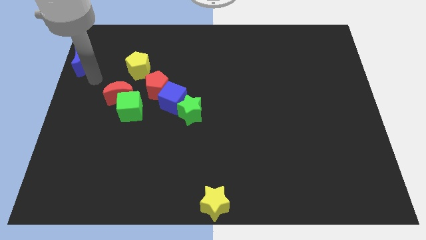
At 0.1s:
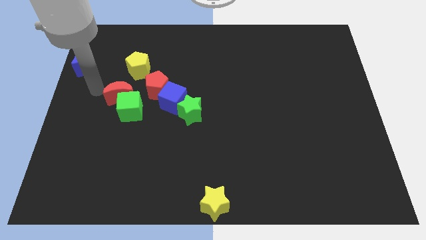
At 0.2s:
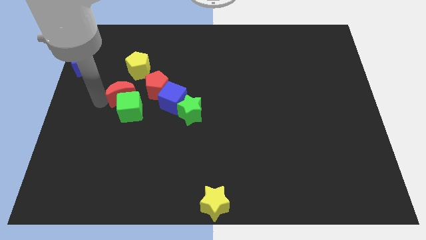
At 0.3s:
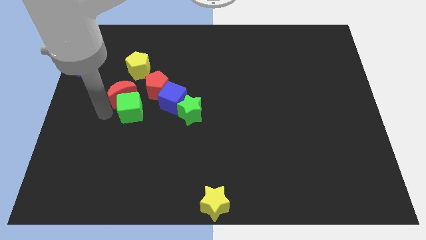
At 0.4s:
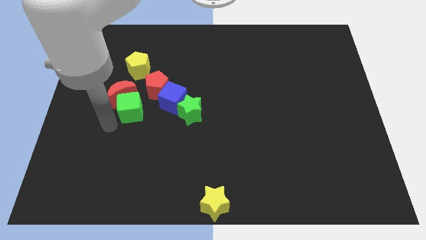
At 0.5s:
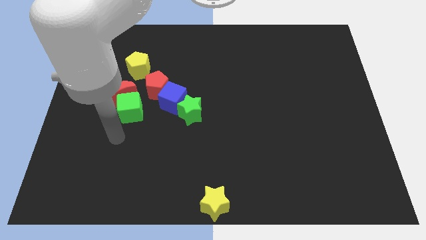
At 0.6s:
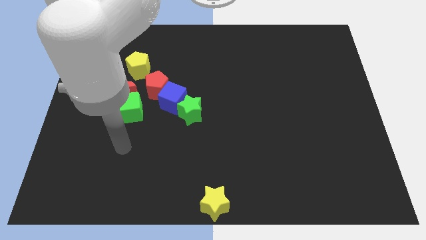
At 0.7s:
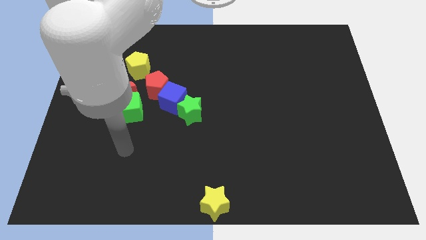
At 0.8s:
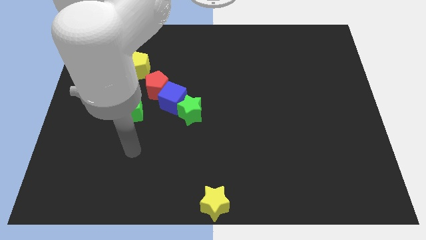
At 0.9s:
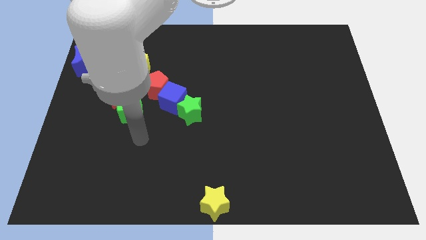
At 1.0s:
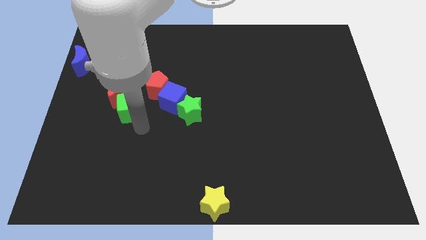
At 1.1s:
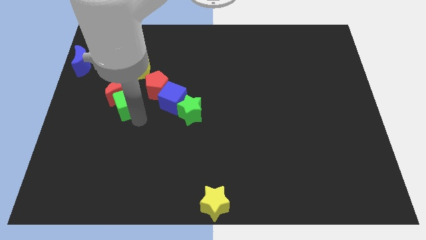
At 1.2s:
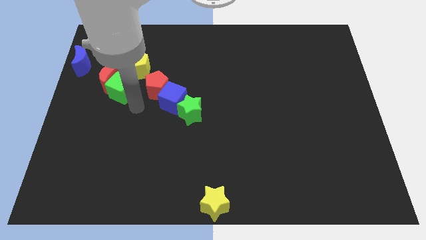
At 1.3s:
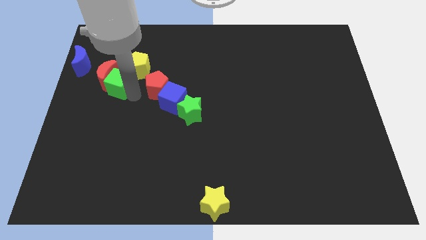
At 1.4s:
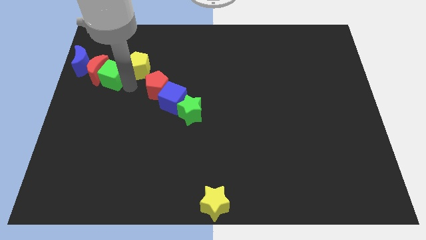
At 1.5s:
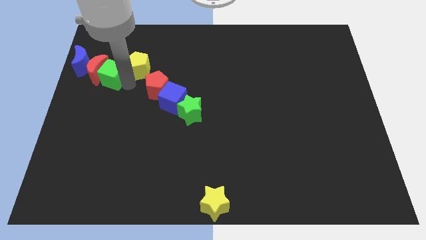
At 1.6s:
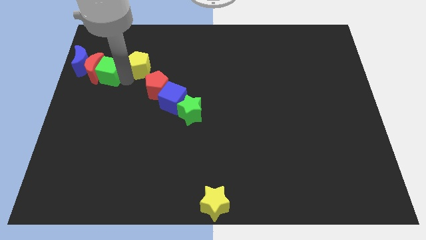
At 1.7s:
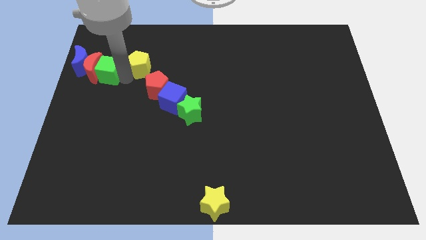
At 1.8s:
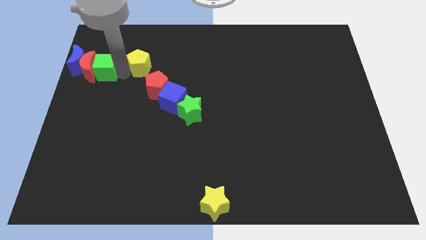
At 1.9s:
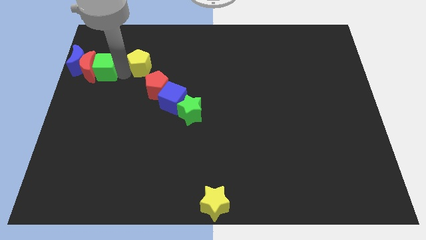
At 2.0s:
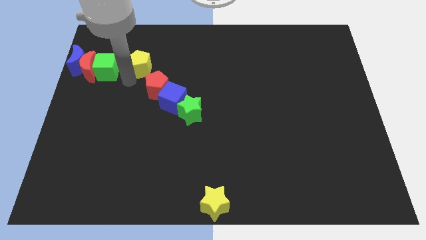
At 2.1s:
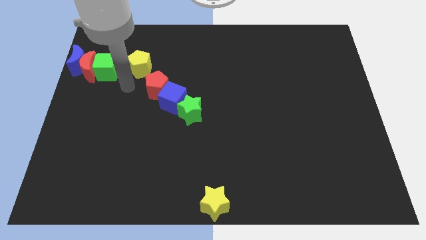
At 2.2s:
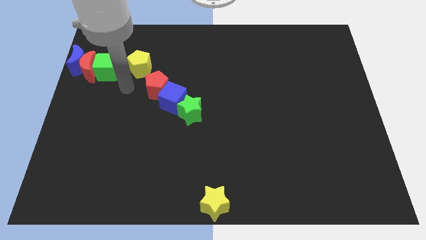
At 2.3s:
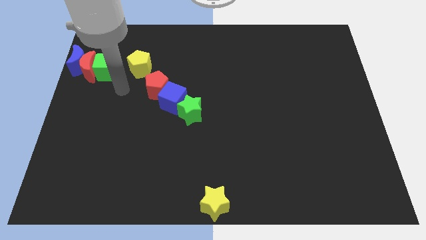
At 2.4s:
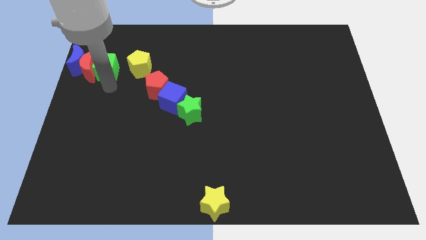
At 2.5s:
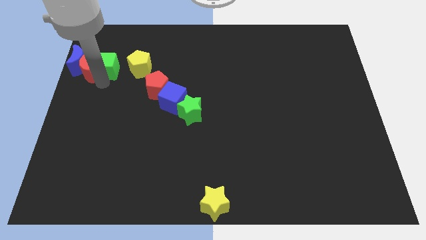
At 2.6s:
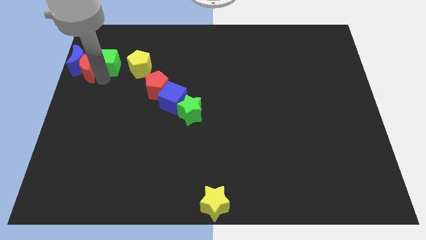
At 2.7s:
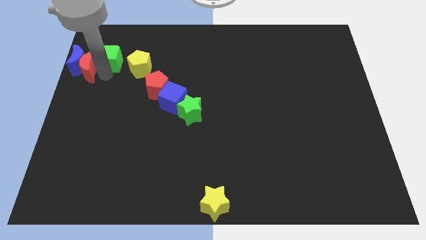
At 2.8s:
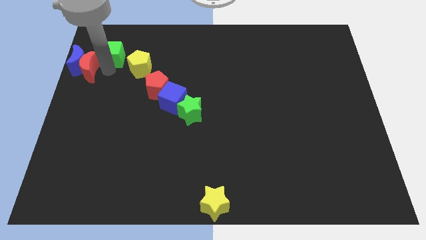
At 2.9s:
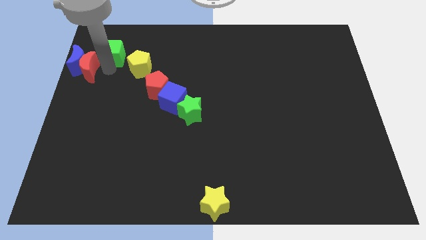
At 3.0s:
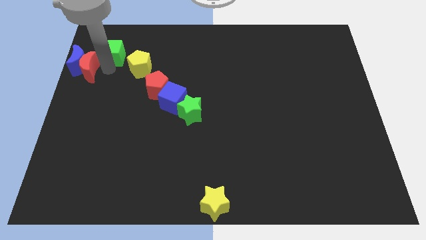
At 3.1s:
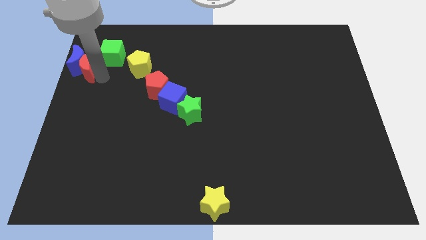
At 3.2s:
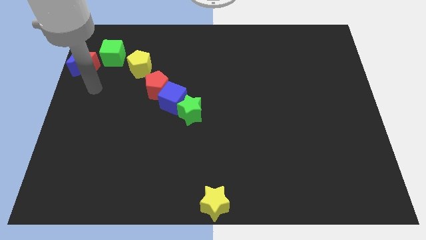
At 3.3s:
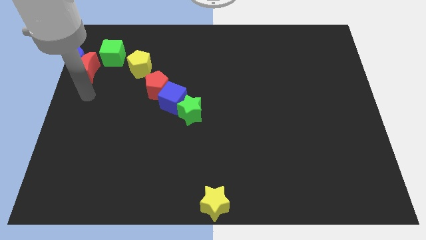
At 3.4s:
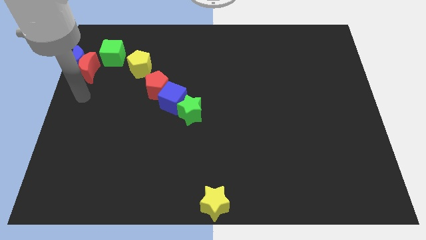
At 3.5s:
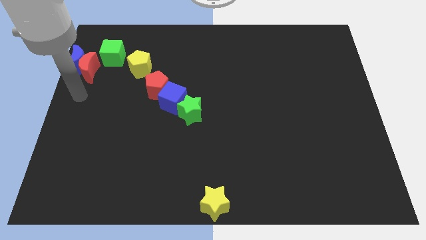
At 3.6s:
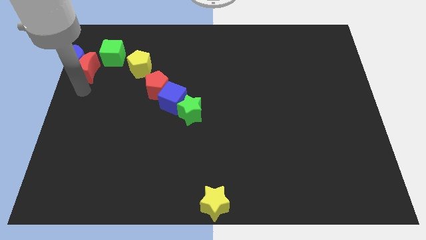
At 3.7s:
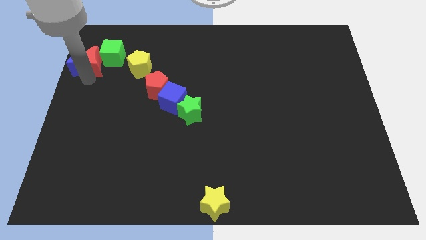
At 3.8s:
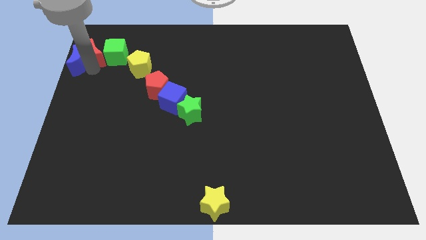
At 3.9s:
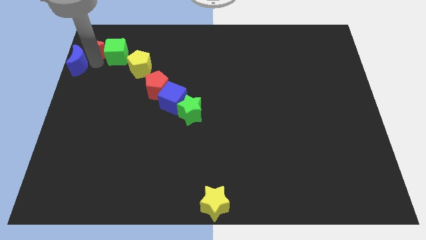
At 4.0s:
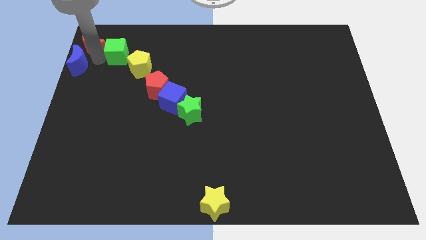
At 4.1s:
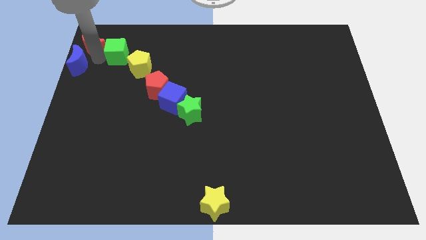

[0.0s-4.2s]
push the green cube and the red crescent to the top of the board

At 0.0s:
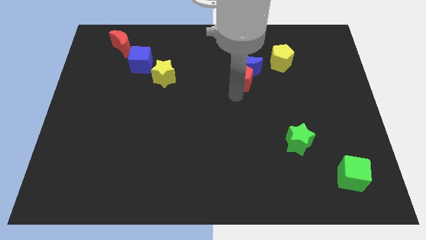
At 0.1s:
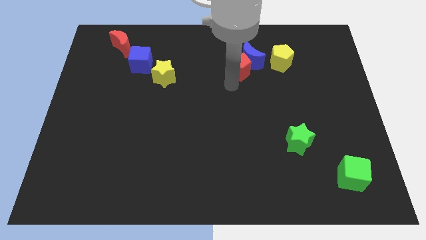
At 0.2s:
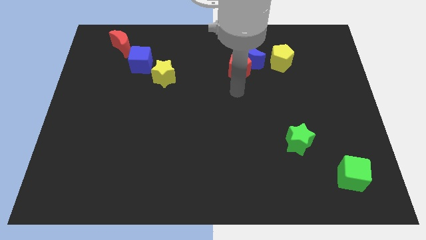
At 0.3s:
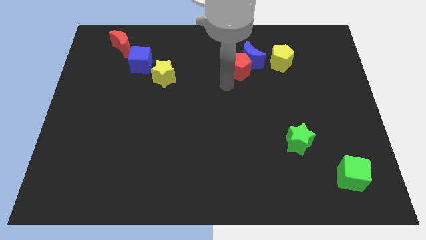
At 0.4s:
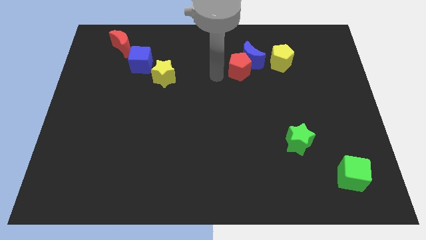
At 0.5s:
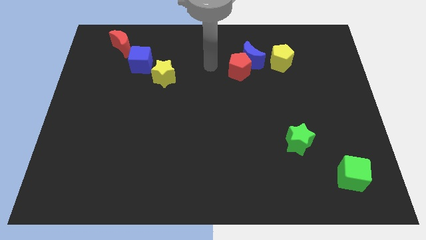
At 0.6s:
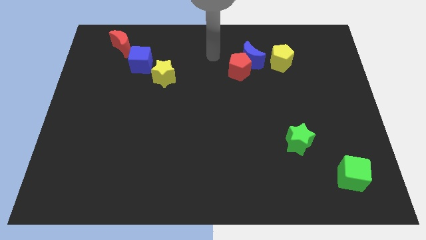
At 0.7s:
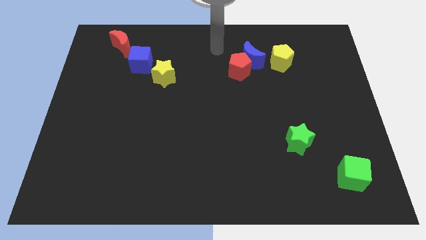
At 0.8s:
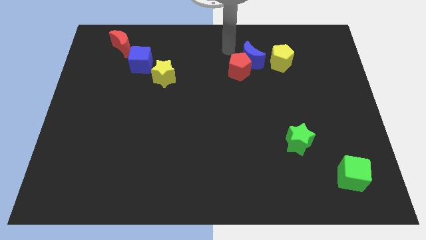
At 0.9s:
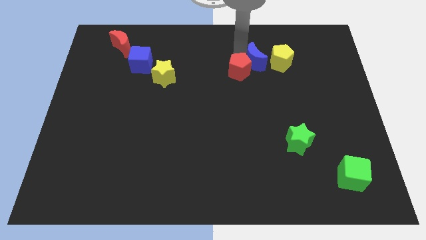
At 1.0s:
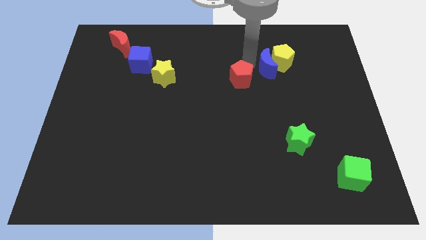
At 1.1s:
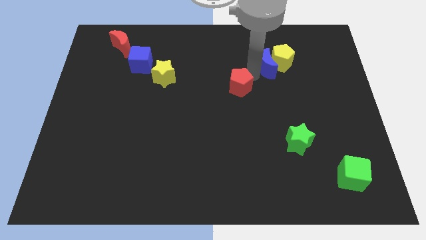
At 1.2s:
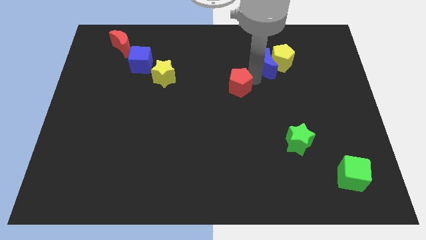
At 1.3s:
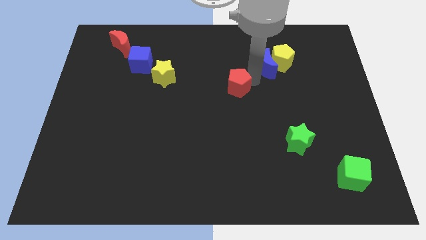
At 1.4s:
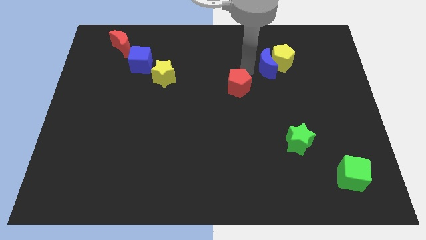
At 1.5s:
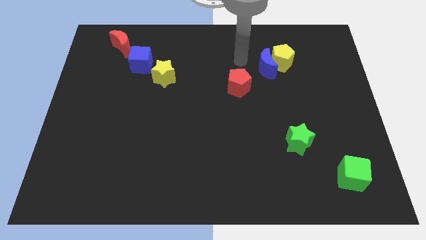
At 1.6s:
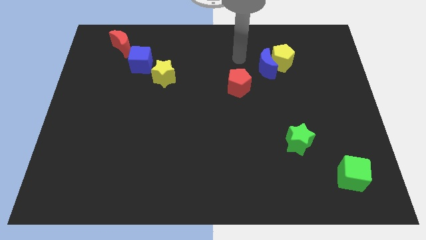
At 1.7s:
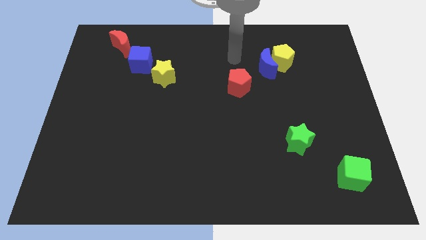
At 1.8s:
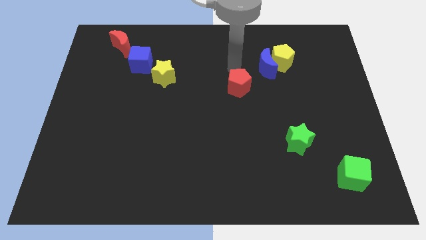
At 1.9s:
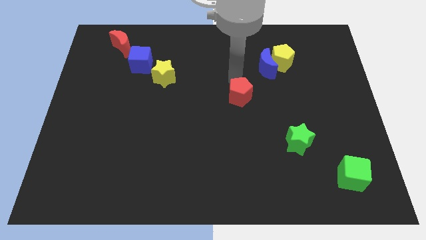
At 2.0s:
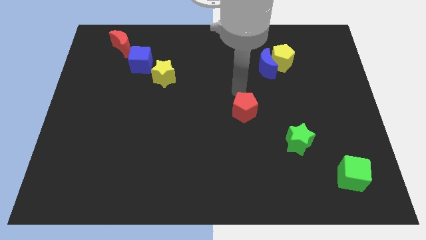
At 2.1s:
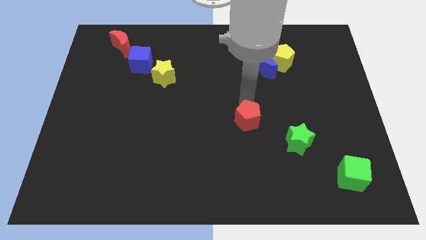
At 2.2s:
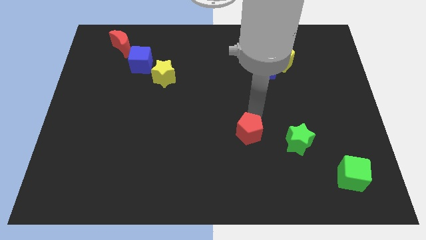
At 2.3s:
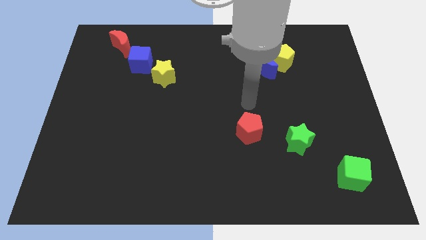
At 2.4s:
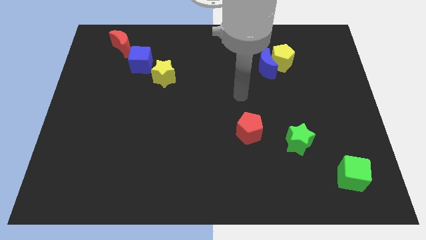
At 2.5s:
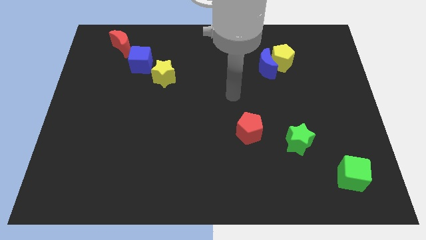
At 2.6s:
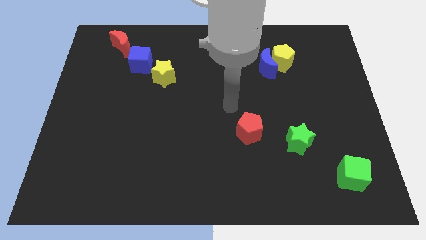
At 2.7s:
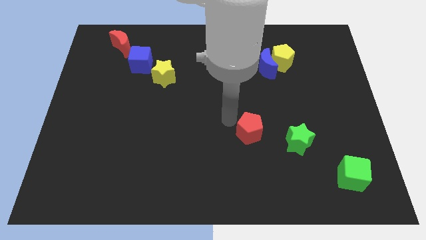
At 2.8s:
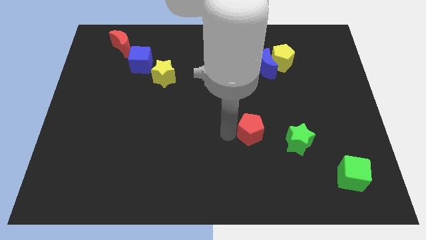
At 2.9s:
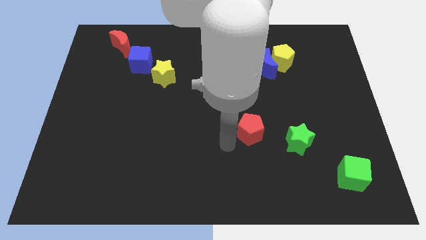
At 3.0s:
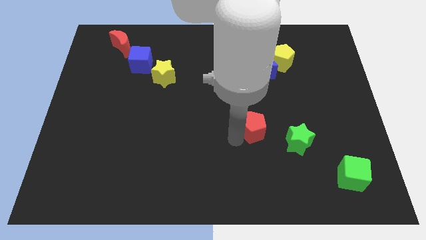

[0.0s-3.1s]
place the red pentagon beside the green star to form a line

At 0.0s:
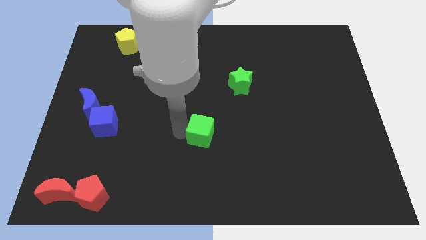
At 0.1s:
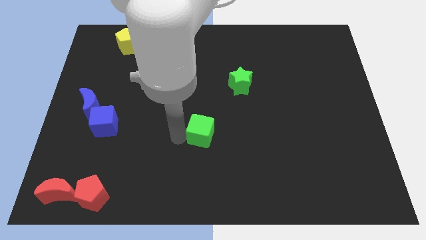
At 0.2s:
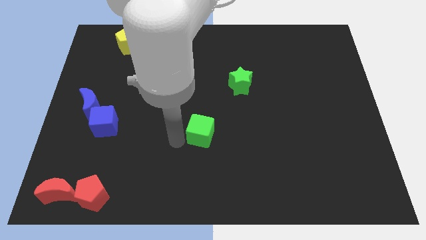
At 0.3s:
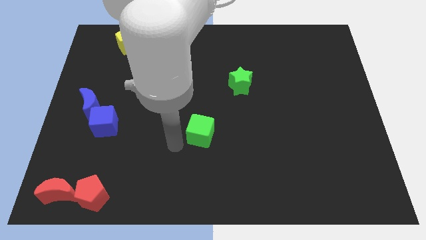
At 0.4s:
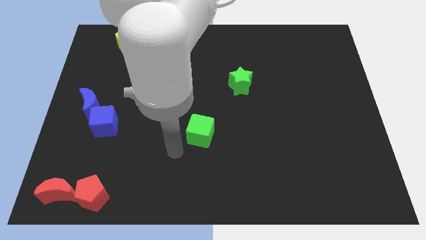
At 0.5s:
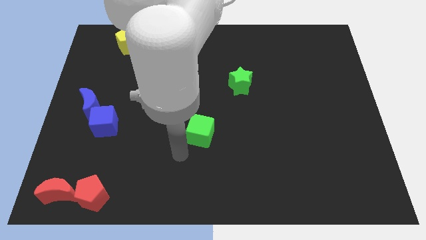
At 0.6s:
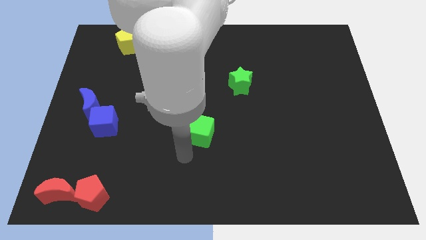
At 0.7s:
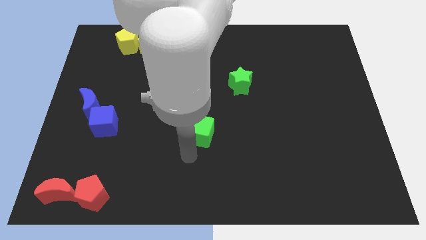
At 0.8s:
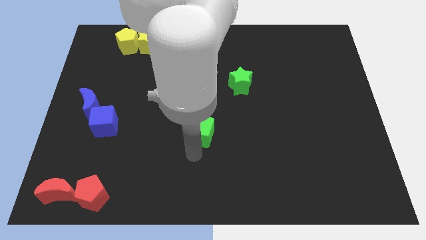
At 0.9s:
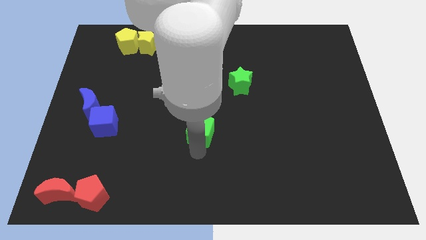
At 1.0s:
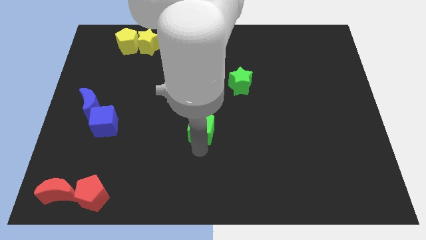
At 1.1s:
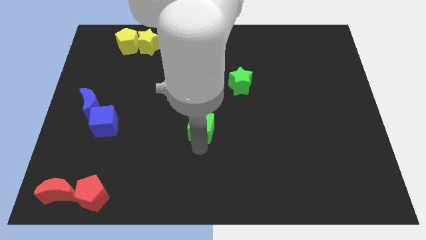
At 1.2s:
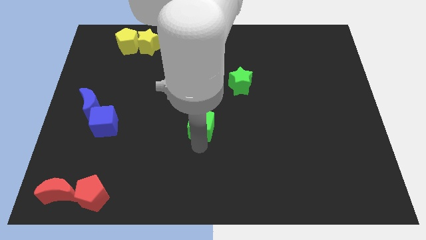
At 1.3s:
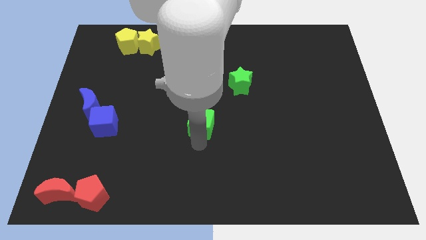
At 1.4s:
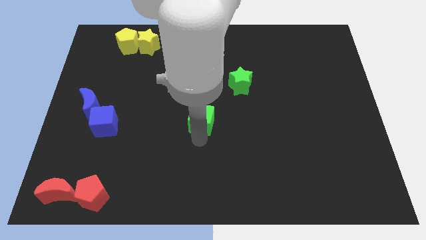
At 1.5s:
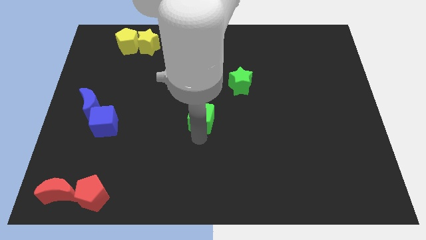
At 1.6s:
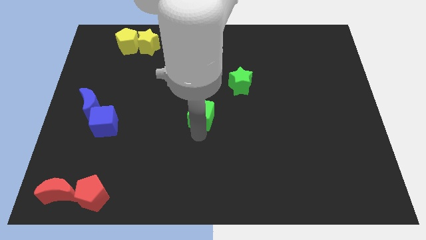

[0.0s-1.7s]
push green cube slightly towards upwards
